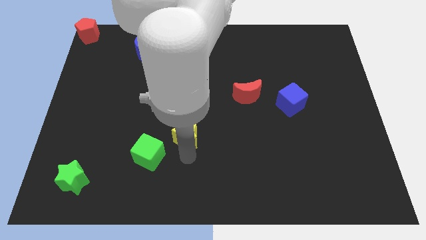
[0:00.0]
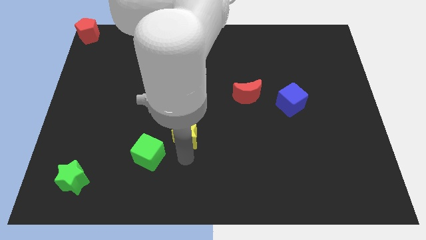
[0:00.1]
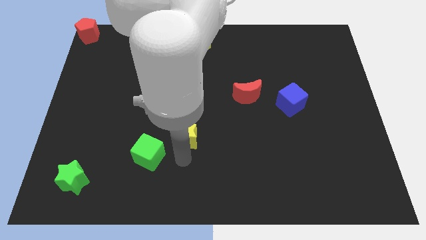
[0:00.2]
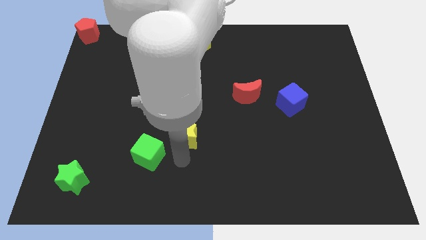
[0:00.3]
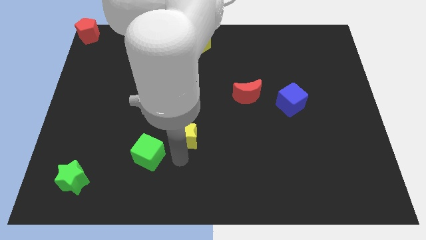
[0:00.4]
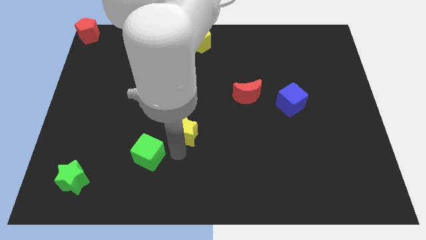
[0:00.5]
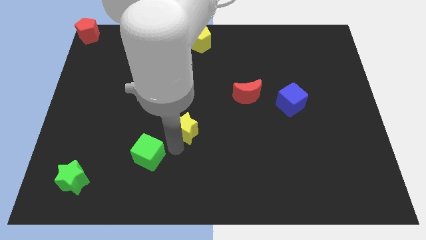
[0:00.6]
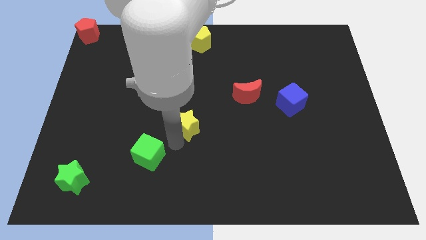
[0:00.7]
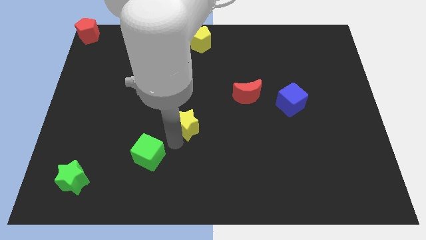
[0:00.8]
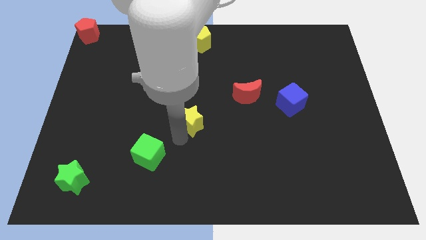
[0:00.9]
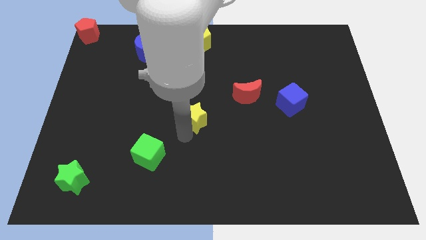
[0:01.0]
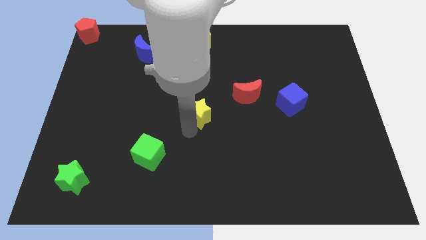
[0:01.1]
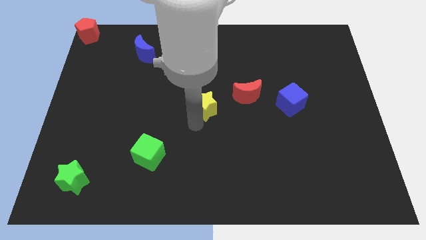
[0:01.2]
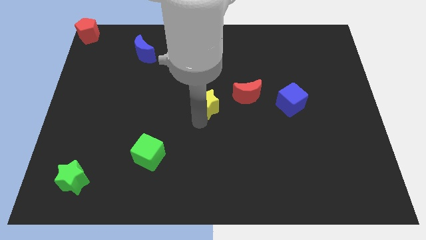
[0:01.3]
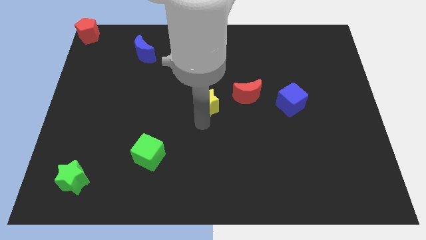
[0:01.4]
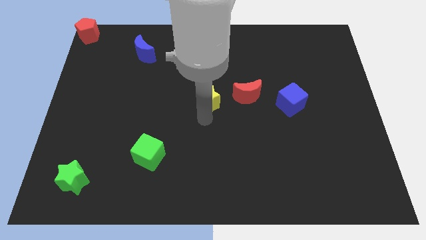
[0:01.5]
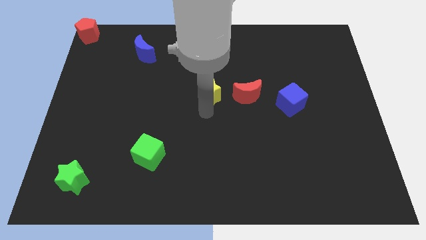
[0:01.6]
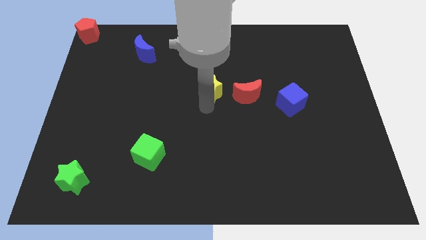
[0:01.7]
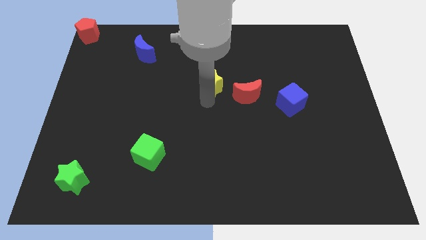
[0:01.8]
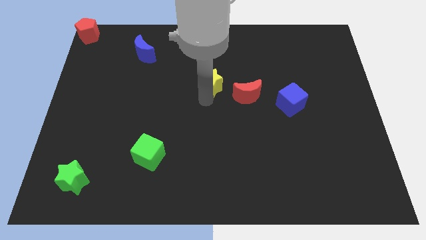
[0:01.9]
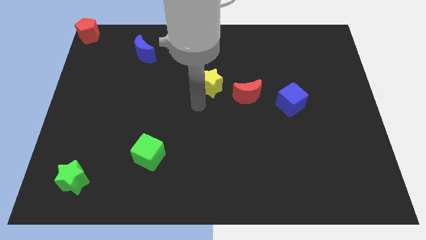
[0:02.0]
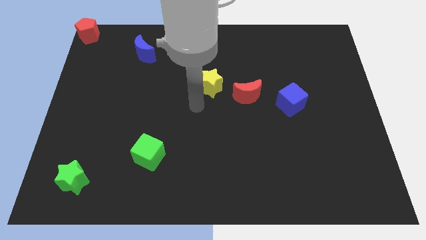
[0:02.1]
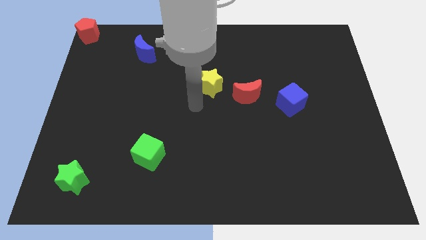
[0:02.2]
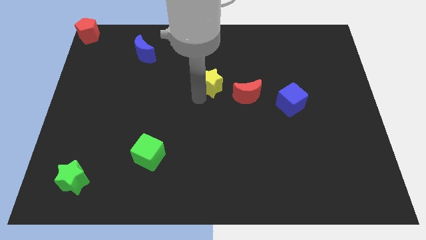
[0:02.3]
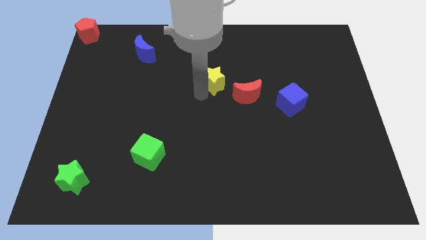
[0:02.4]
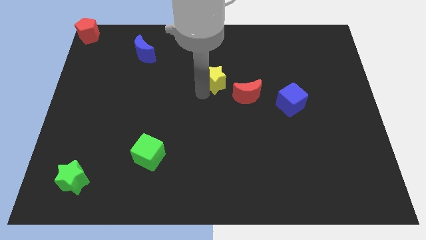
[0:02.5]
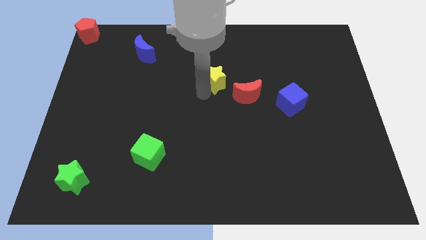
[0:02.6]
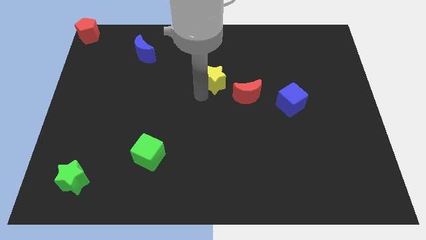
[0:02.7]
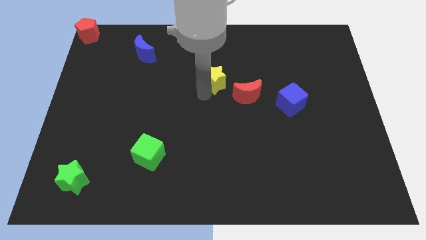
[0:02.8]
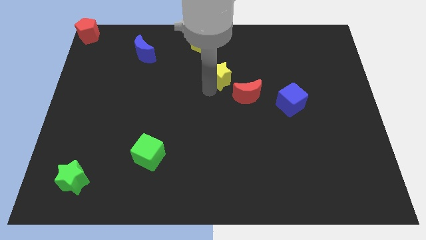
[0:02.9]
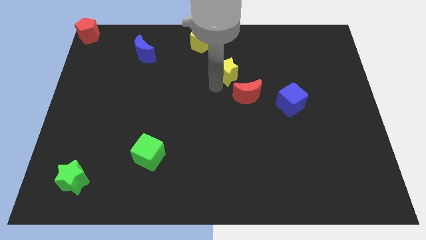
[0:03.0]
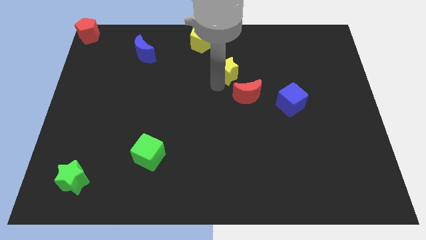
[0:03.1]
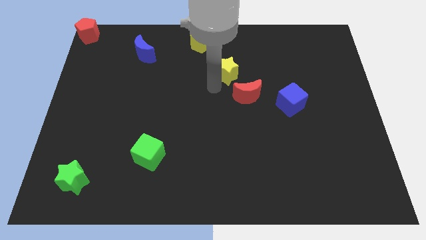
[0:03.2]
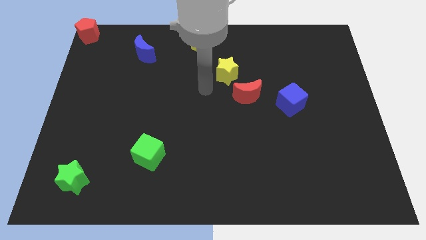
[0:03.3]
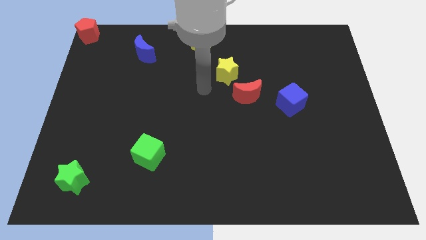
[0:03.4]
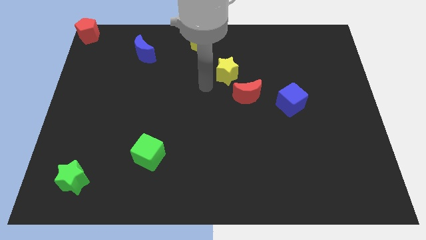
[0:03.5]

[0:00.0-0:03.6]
slide the yellow star diagonally top left to the red moon

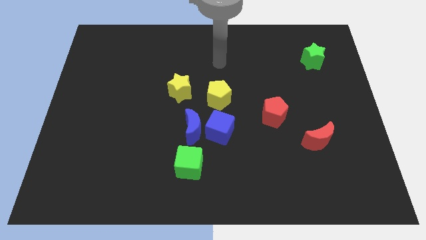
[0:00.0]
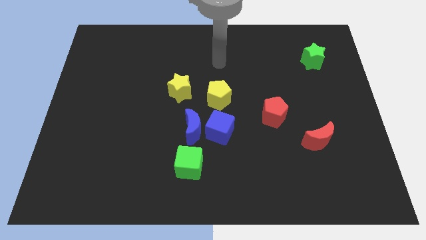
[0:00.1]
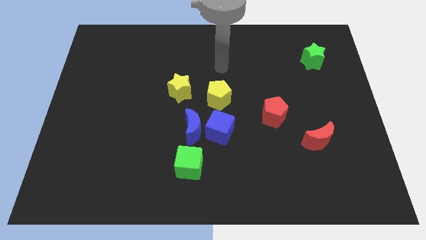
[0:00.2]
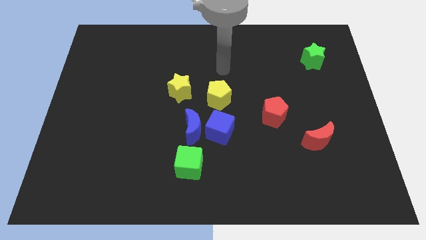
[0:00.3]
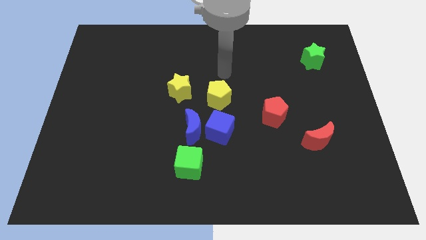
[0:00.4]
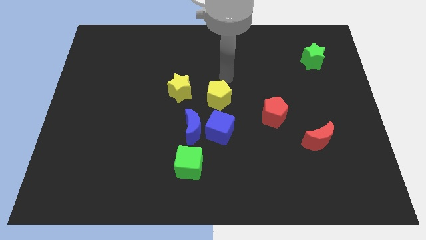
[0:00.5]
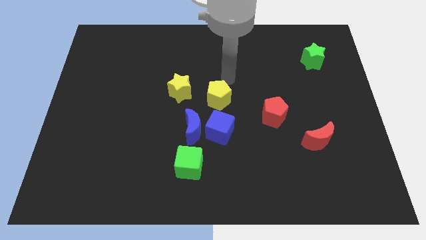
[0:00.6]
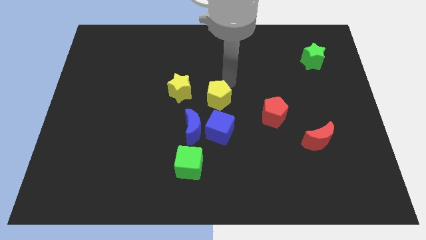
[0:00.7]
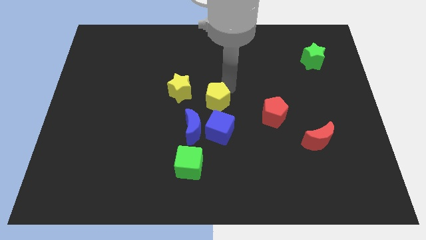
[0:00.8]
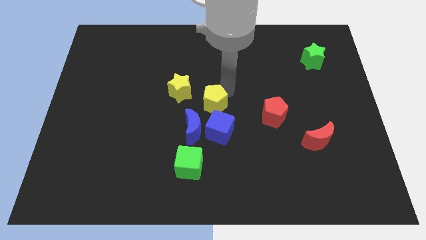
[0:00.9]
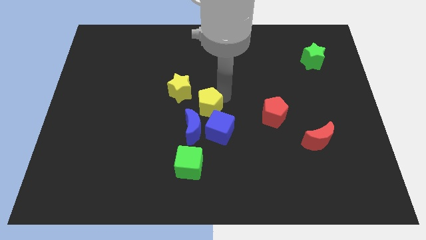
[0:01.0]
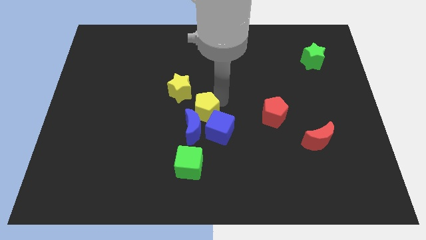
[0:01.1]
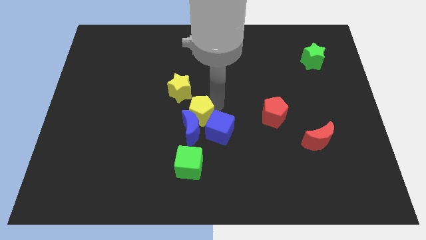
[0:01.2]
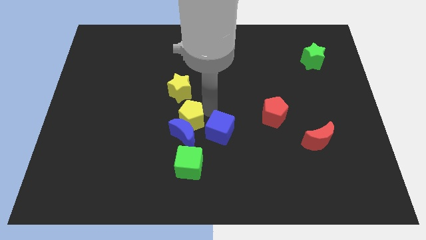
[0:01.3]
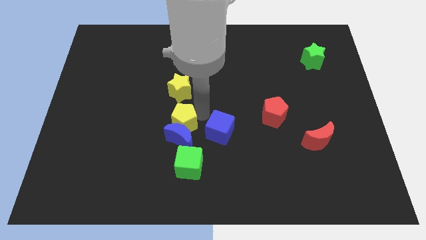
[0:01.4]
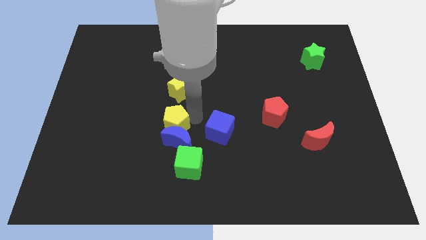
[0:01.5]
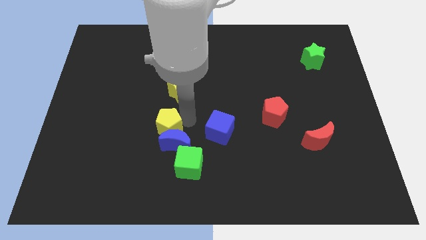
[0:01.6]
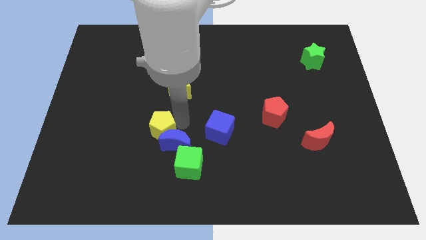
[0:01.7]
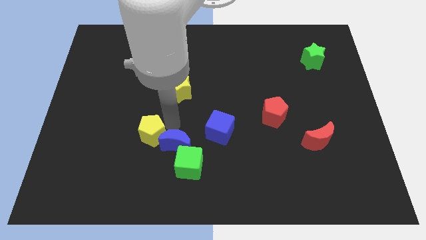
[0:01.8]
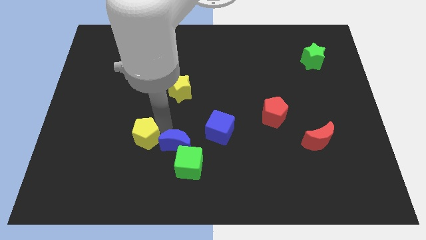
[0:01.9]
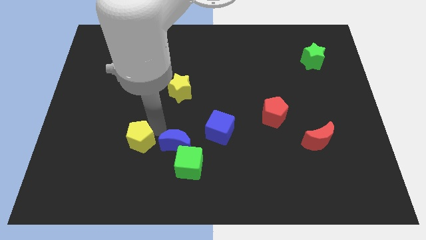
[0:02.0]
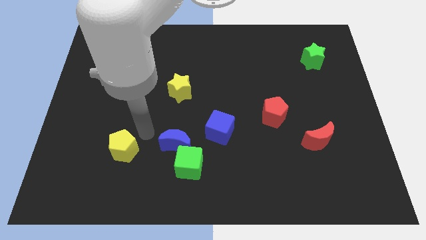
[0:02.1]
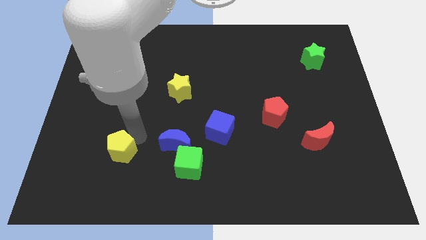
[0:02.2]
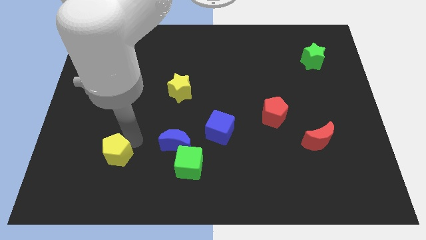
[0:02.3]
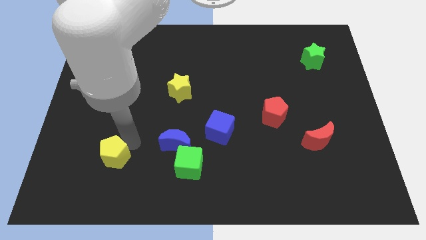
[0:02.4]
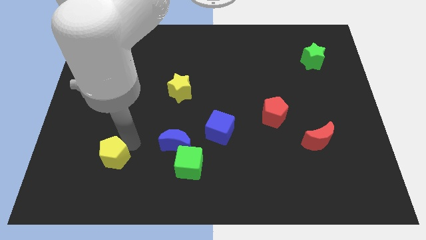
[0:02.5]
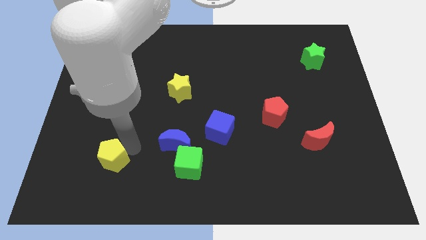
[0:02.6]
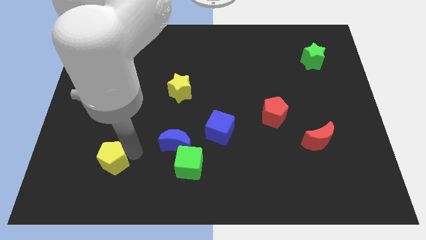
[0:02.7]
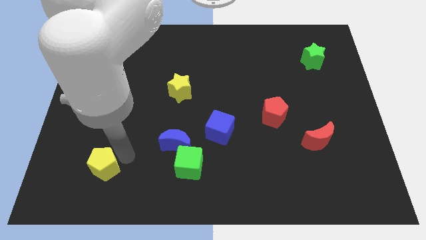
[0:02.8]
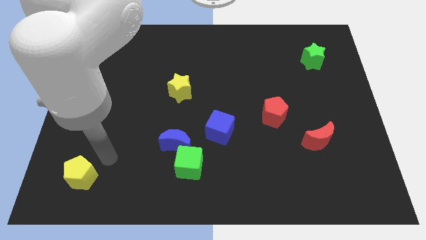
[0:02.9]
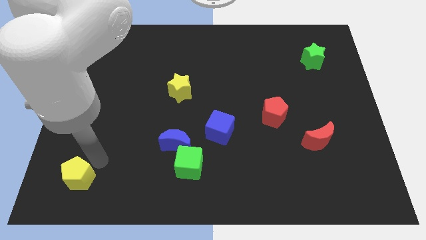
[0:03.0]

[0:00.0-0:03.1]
move yellow pentagon away from the center

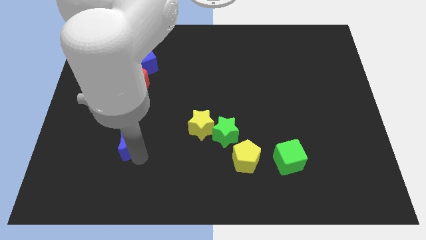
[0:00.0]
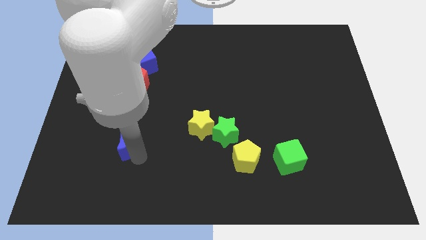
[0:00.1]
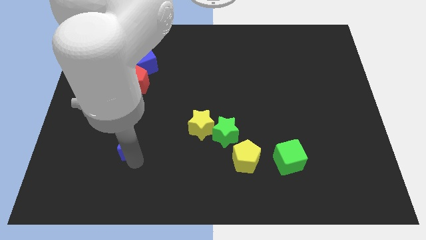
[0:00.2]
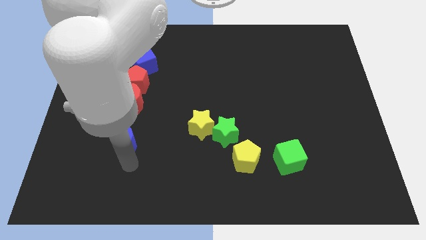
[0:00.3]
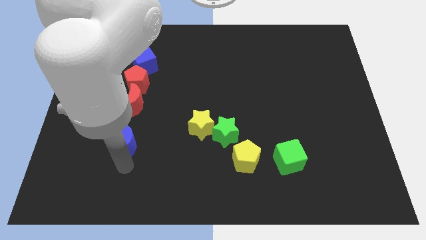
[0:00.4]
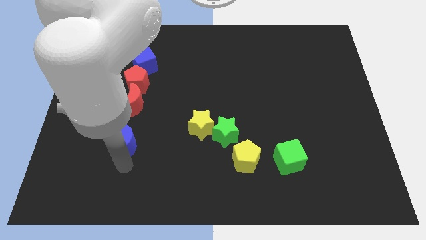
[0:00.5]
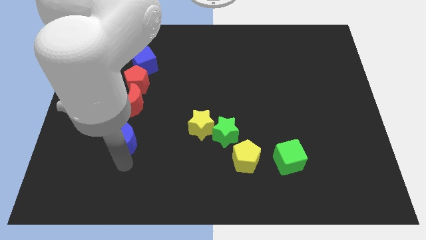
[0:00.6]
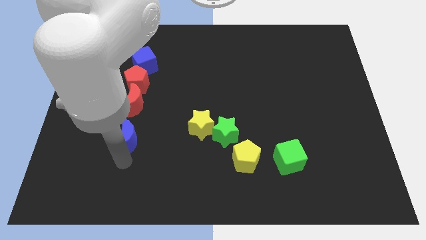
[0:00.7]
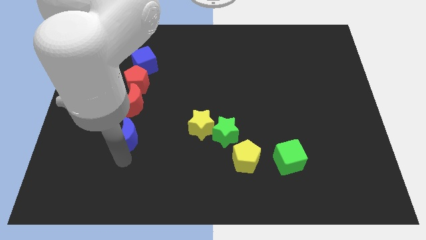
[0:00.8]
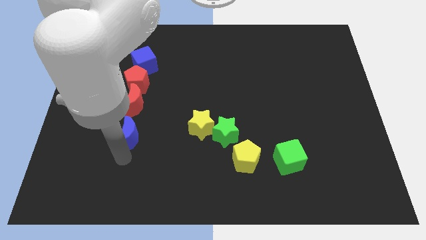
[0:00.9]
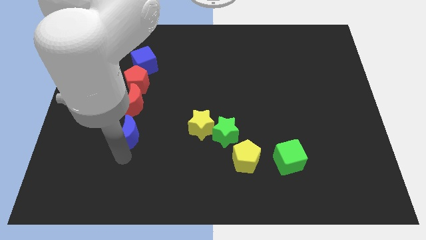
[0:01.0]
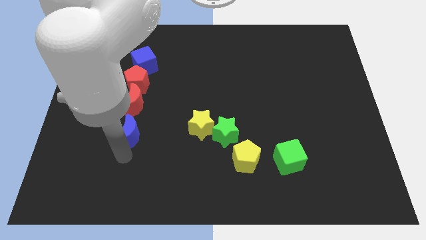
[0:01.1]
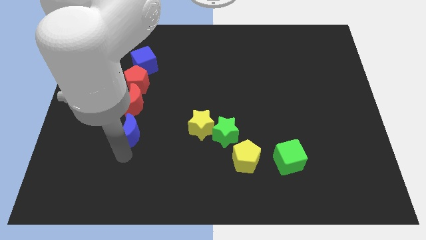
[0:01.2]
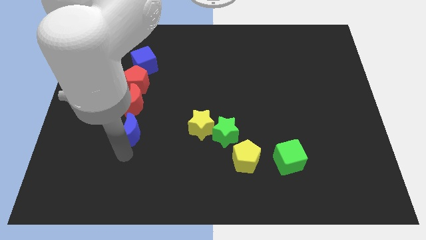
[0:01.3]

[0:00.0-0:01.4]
move the blue crescent towards the bottom side of the red crescent

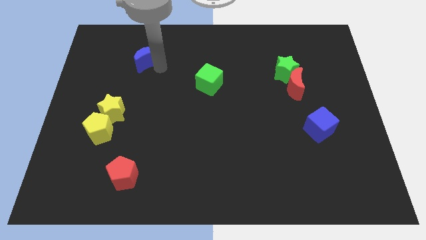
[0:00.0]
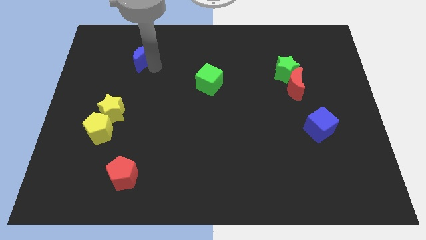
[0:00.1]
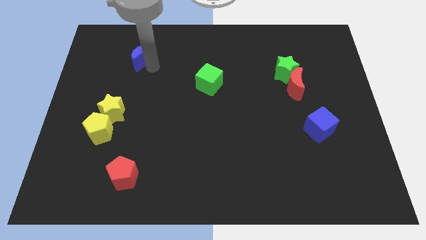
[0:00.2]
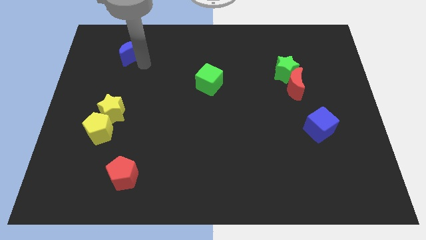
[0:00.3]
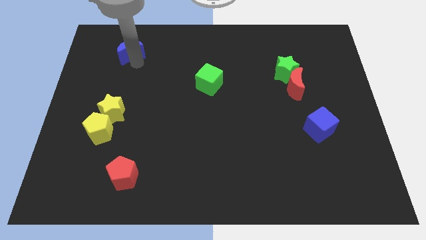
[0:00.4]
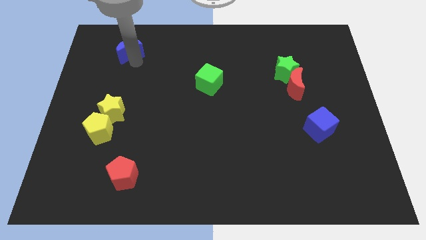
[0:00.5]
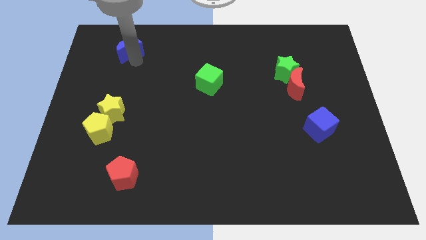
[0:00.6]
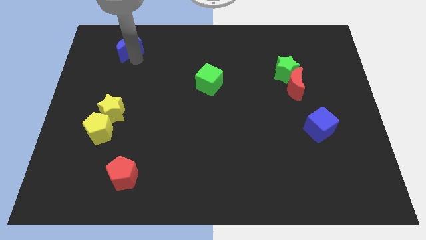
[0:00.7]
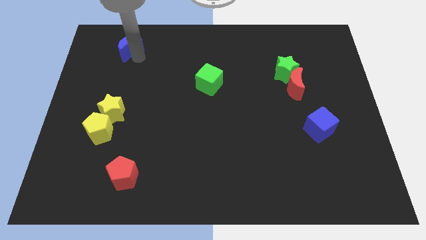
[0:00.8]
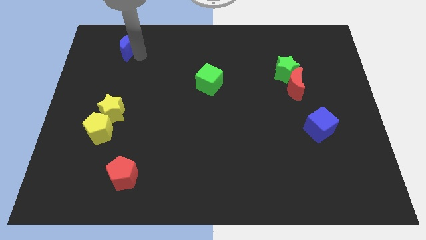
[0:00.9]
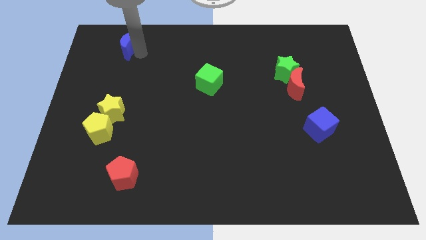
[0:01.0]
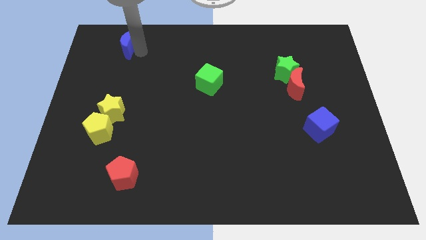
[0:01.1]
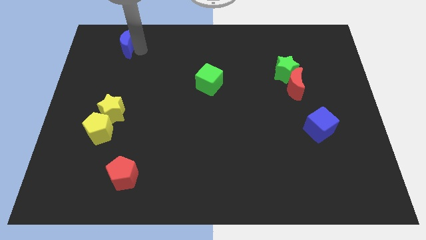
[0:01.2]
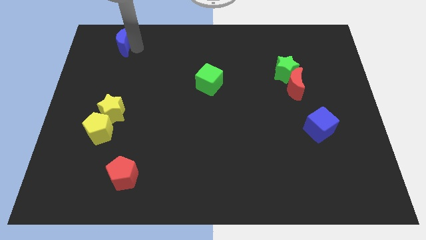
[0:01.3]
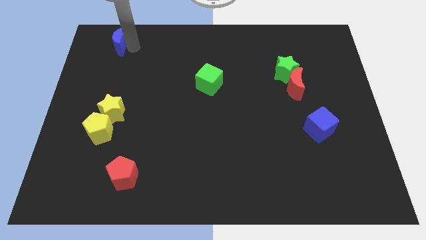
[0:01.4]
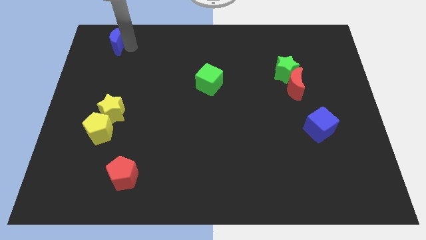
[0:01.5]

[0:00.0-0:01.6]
place the blue moon vertically on the top side of the yellow star
